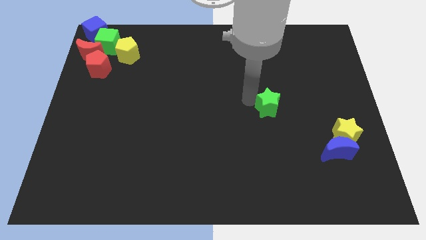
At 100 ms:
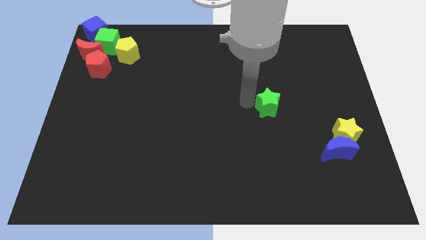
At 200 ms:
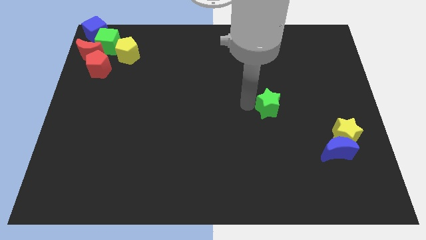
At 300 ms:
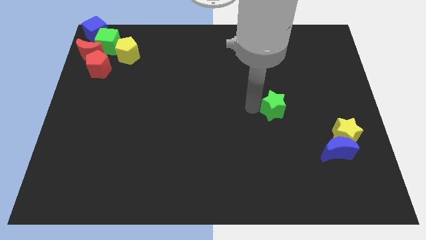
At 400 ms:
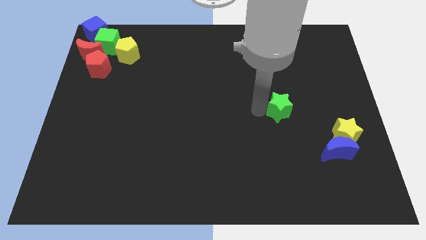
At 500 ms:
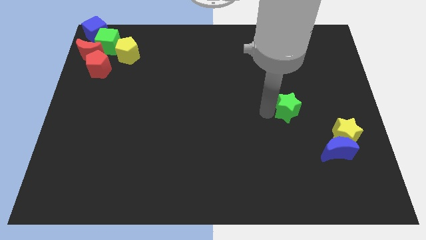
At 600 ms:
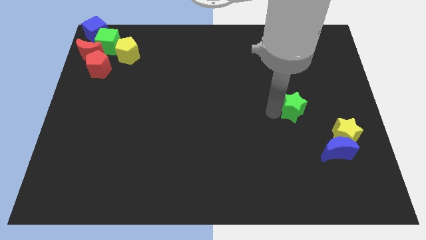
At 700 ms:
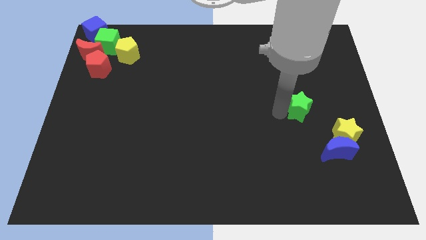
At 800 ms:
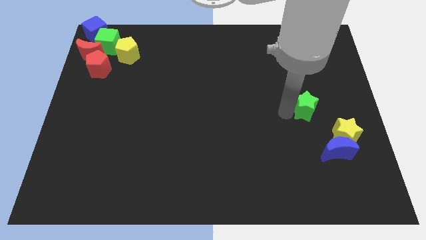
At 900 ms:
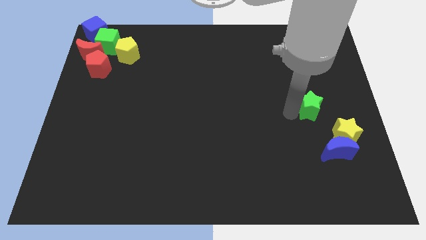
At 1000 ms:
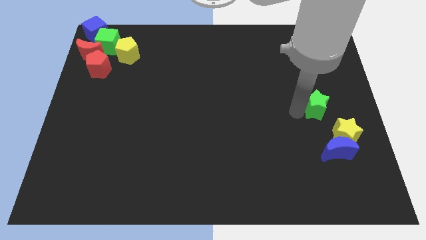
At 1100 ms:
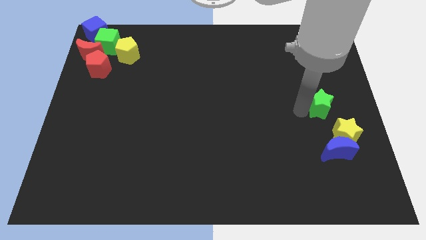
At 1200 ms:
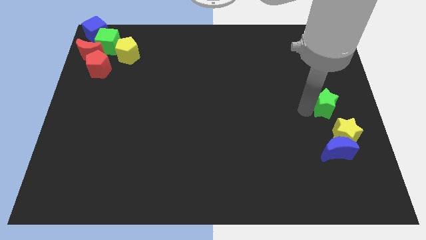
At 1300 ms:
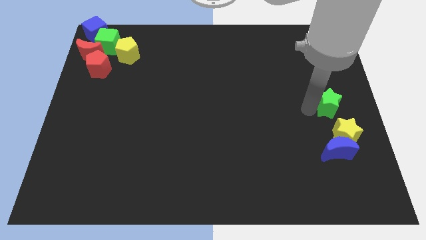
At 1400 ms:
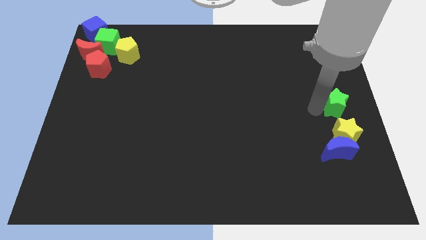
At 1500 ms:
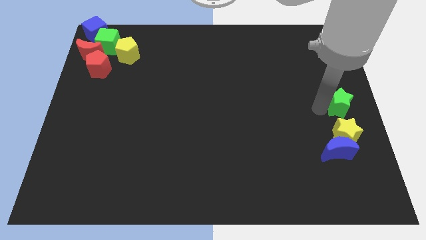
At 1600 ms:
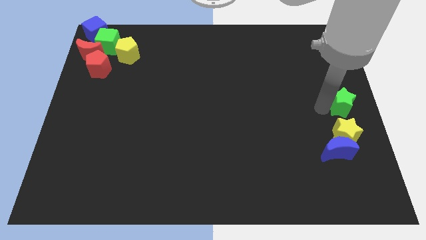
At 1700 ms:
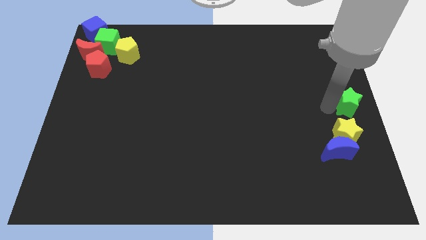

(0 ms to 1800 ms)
move green star above the yellow star

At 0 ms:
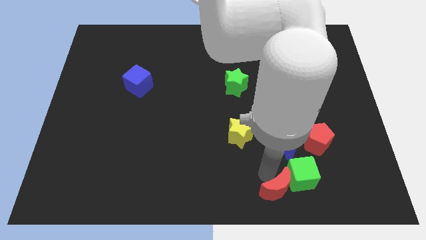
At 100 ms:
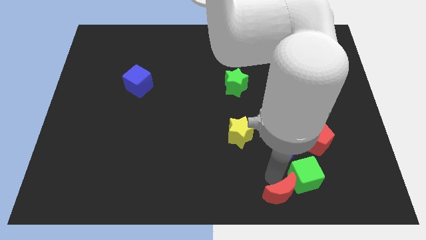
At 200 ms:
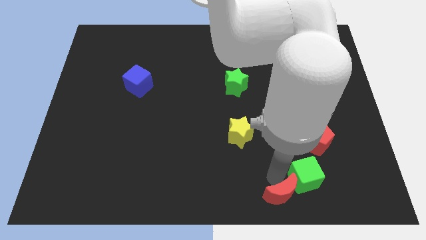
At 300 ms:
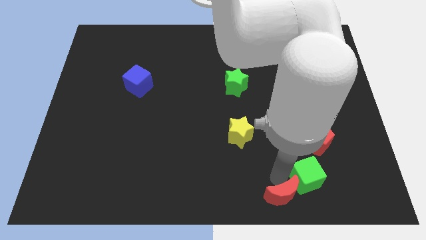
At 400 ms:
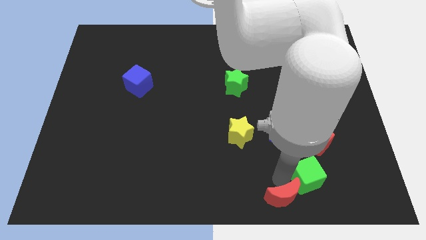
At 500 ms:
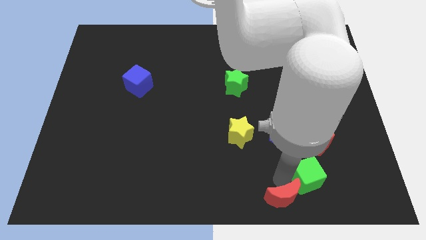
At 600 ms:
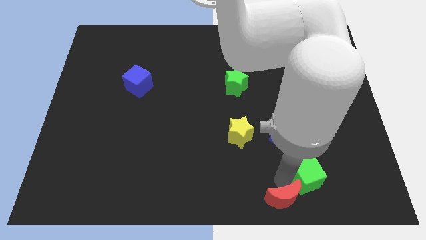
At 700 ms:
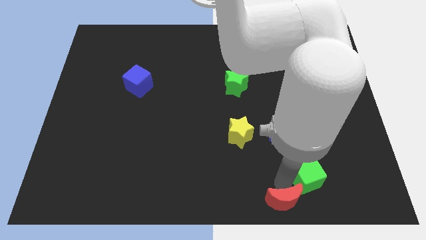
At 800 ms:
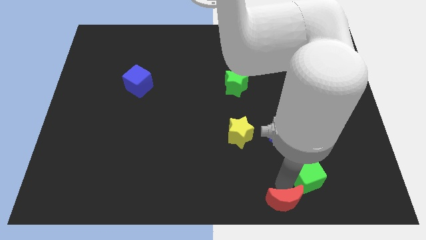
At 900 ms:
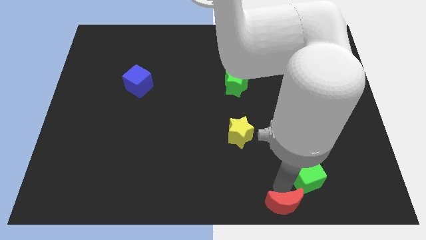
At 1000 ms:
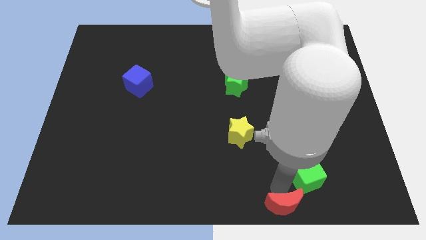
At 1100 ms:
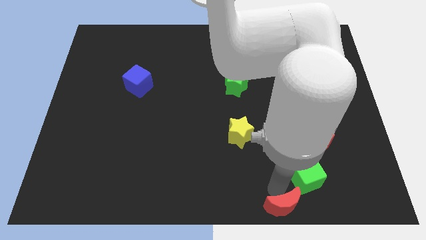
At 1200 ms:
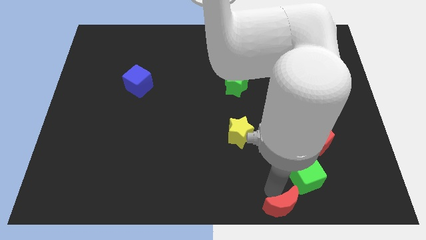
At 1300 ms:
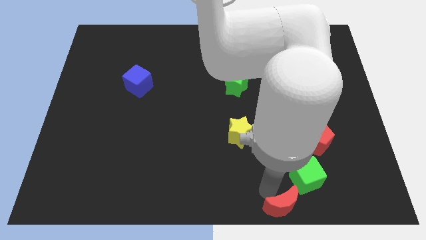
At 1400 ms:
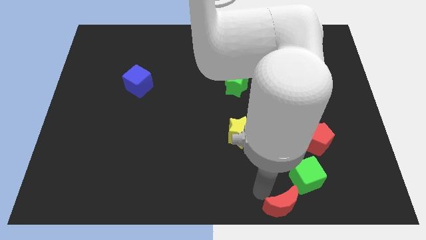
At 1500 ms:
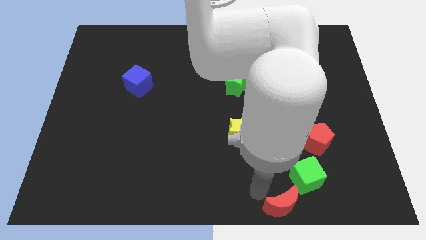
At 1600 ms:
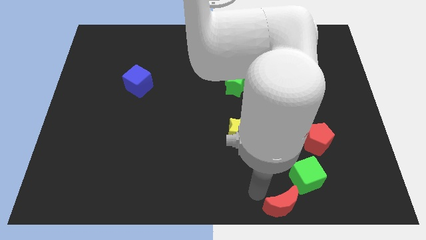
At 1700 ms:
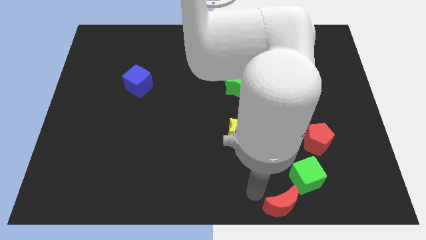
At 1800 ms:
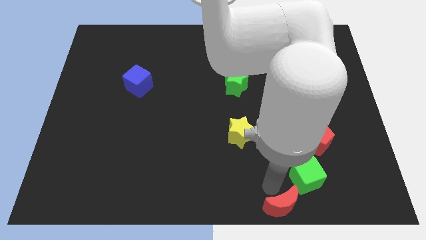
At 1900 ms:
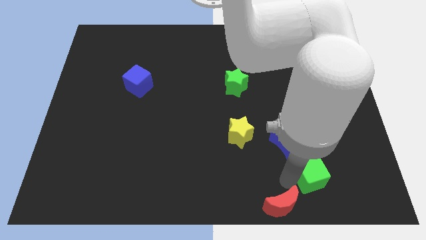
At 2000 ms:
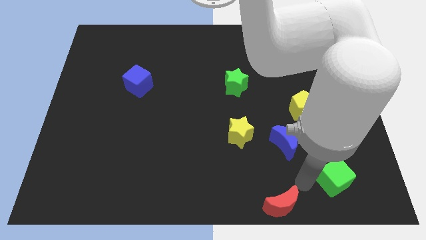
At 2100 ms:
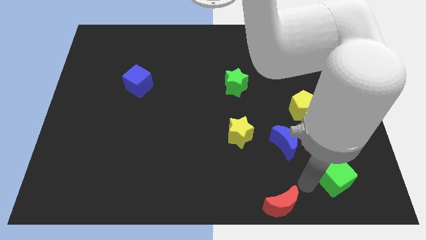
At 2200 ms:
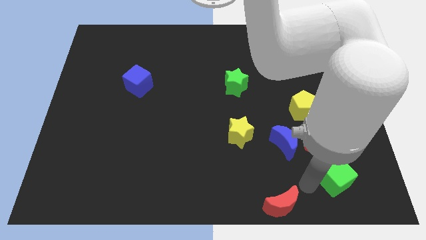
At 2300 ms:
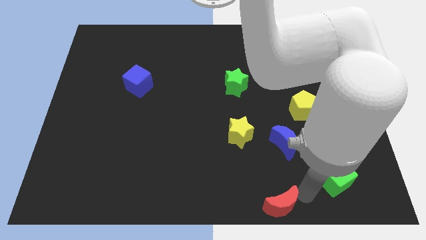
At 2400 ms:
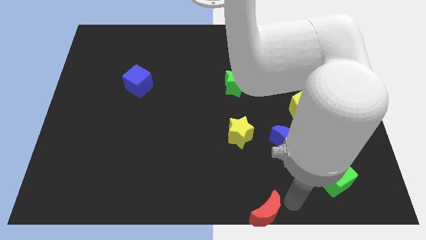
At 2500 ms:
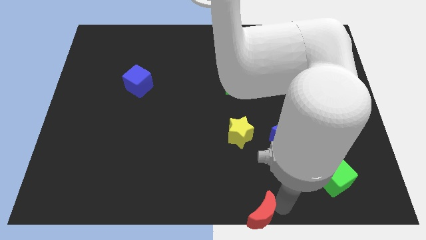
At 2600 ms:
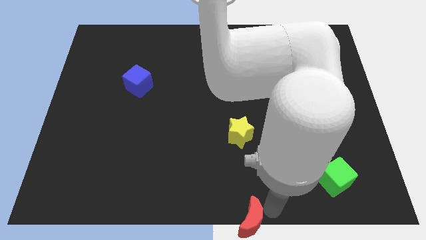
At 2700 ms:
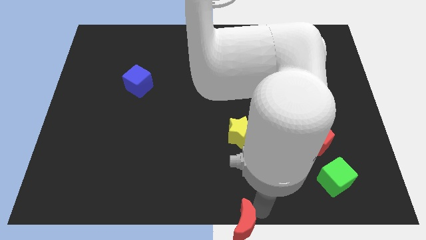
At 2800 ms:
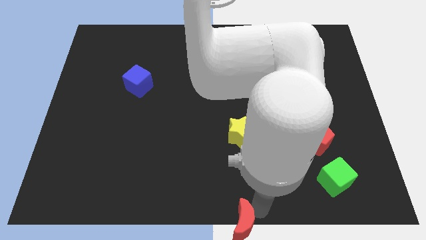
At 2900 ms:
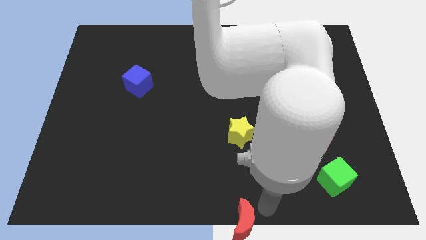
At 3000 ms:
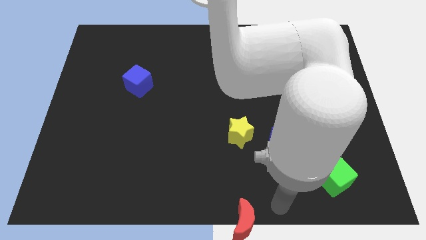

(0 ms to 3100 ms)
push the red crescent to the bottom center

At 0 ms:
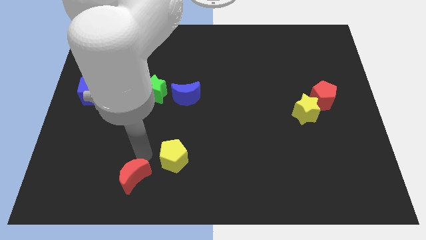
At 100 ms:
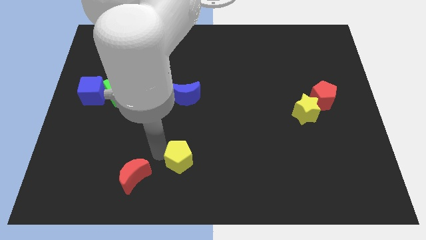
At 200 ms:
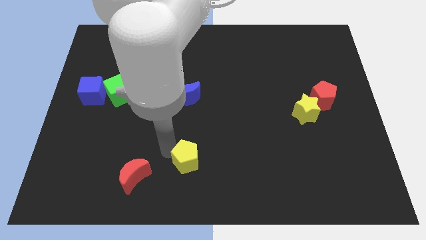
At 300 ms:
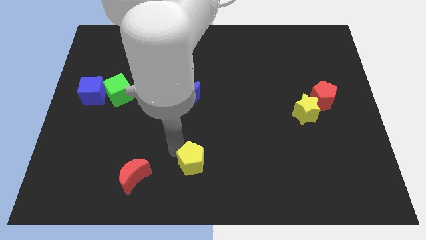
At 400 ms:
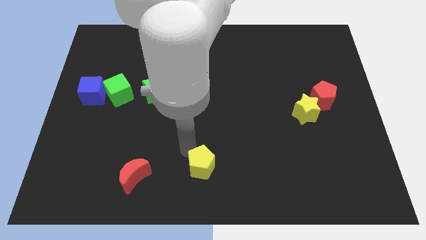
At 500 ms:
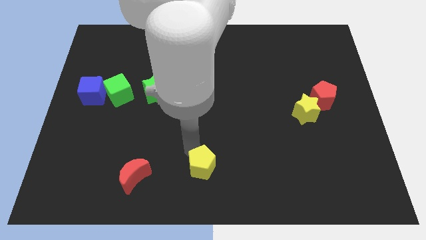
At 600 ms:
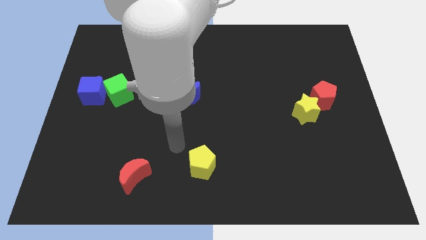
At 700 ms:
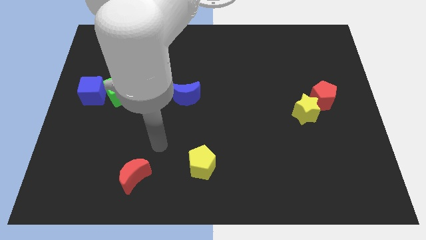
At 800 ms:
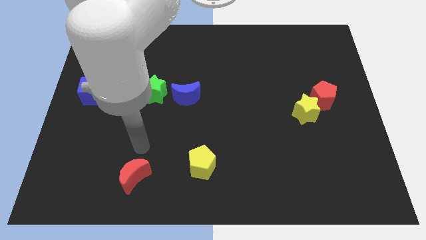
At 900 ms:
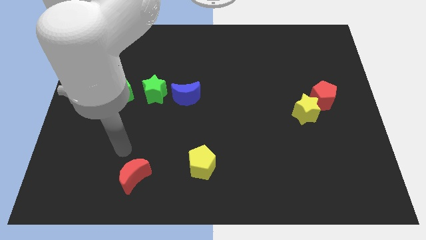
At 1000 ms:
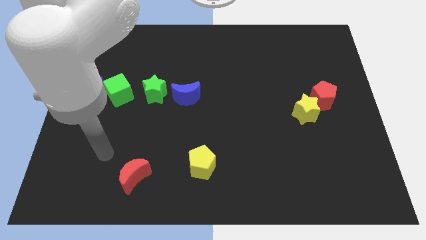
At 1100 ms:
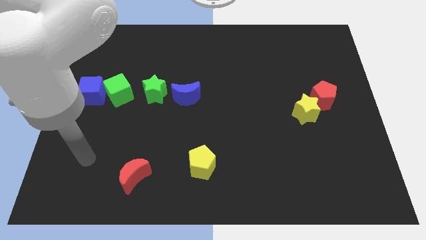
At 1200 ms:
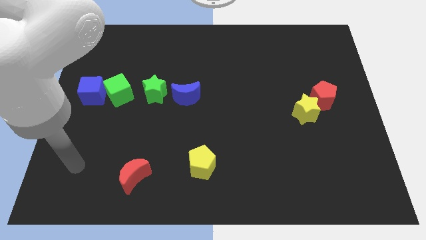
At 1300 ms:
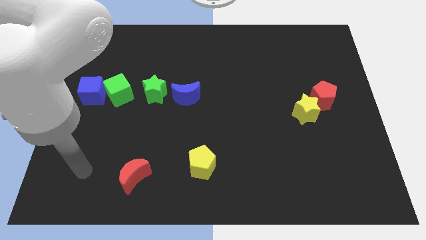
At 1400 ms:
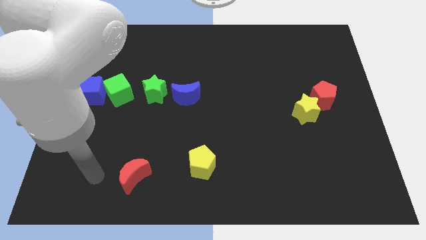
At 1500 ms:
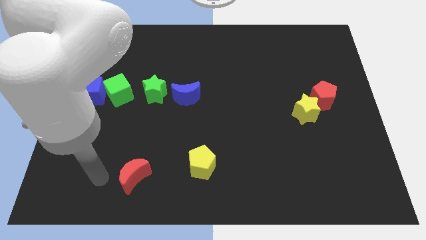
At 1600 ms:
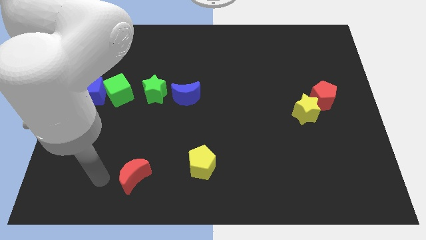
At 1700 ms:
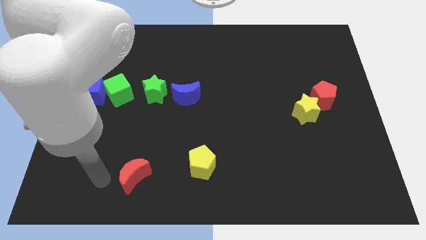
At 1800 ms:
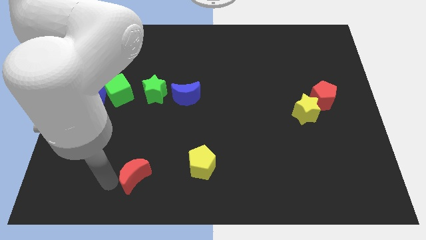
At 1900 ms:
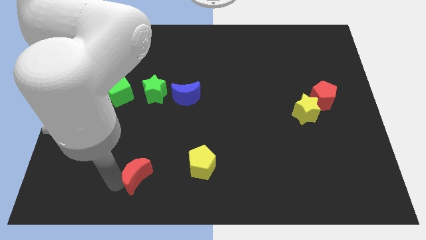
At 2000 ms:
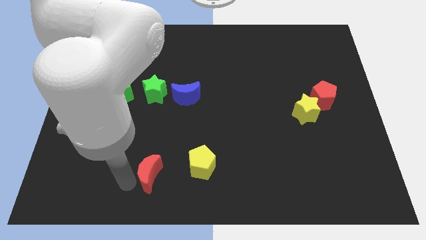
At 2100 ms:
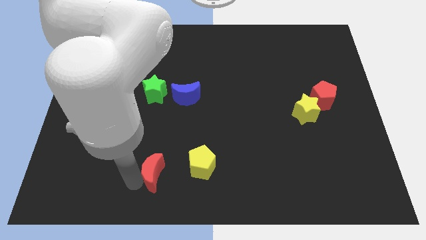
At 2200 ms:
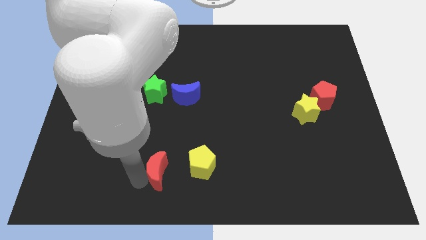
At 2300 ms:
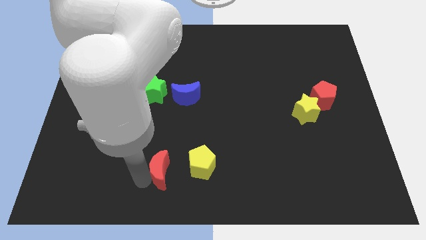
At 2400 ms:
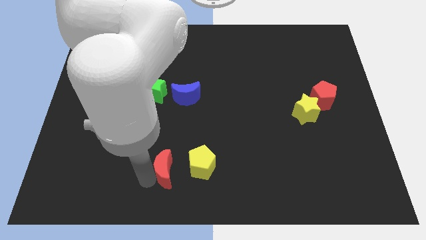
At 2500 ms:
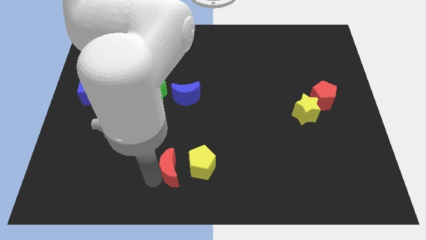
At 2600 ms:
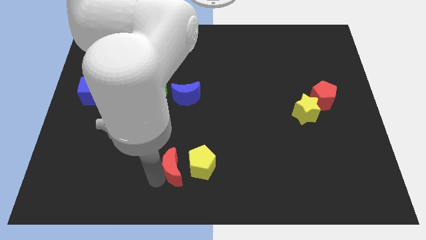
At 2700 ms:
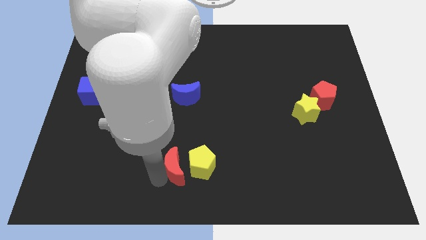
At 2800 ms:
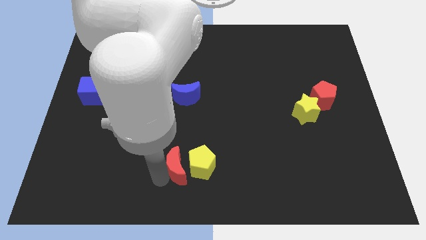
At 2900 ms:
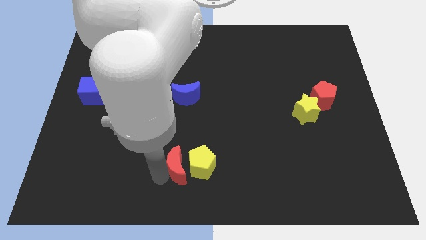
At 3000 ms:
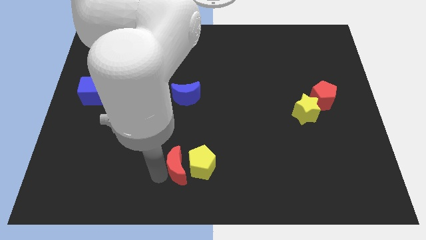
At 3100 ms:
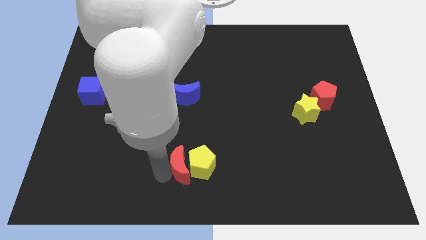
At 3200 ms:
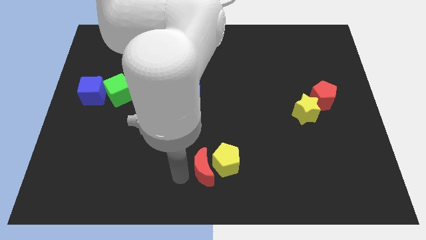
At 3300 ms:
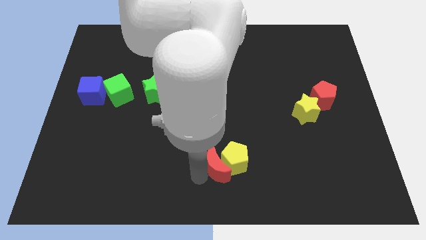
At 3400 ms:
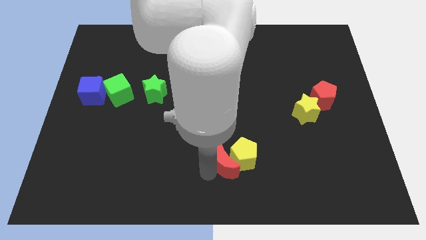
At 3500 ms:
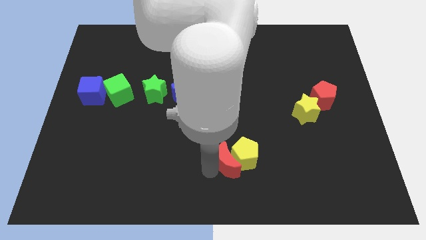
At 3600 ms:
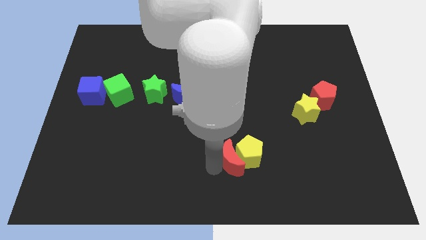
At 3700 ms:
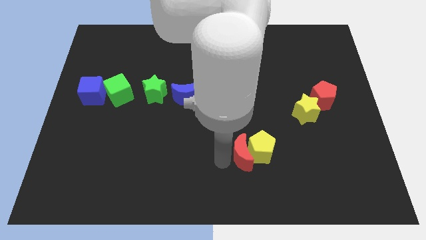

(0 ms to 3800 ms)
push the red crescent into the yellow pentagon

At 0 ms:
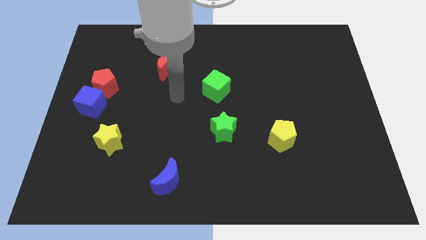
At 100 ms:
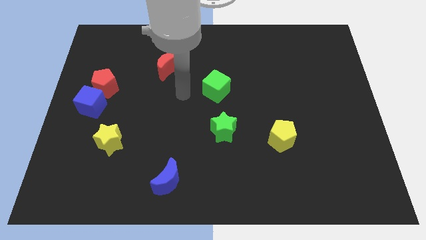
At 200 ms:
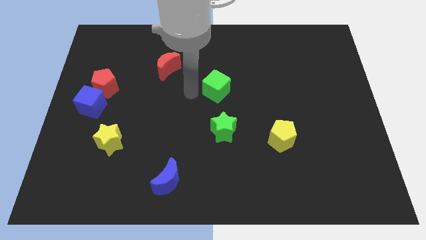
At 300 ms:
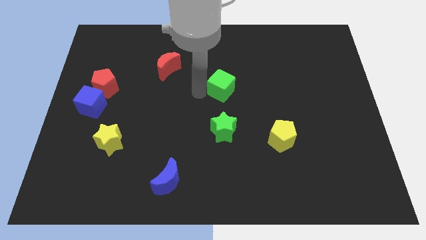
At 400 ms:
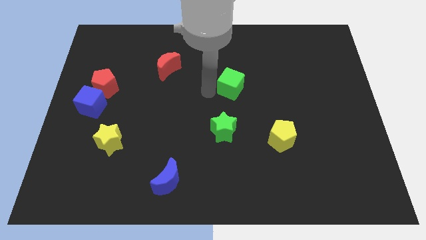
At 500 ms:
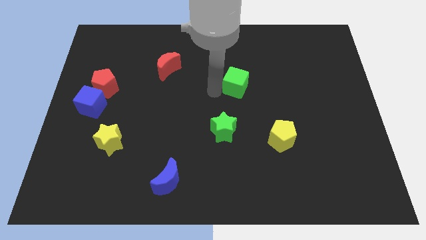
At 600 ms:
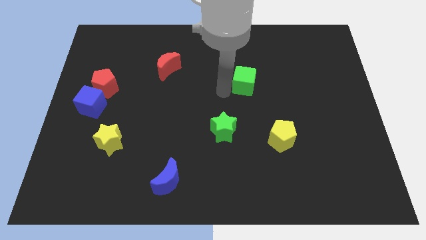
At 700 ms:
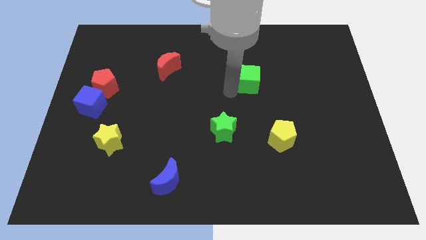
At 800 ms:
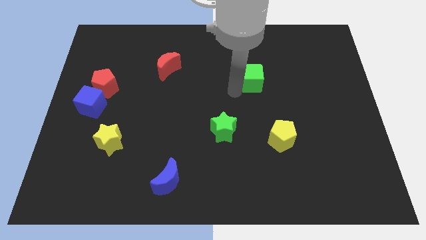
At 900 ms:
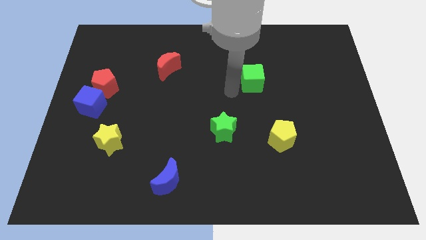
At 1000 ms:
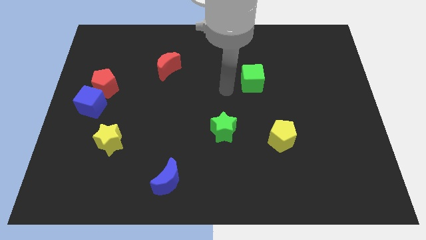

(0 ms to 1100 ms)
move the green cube to the right
